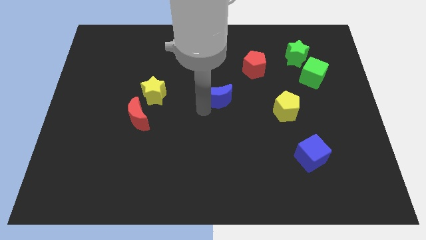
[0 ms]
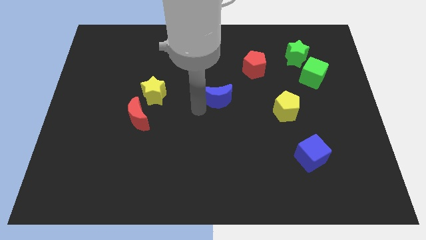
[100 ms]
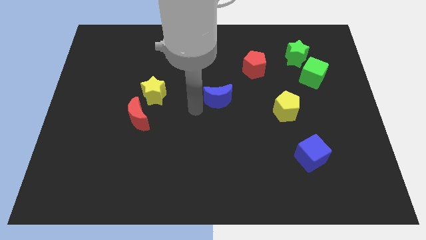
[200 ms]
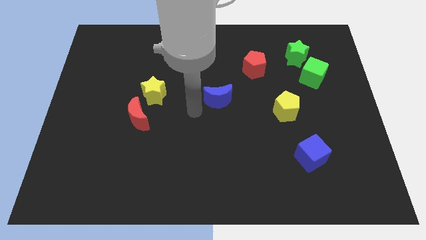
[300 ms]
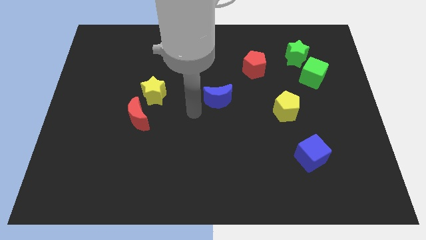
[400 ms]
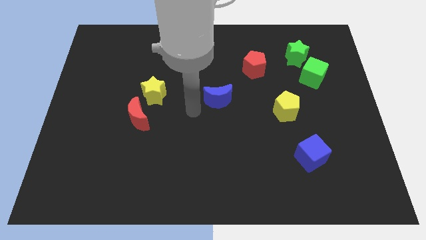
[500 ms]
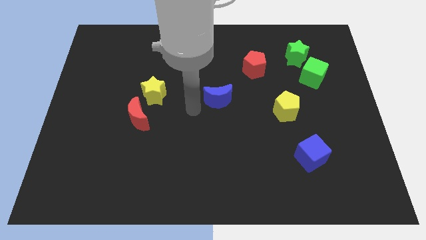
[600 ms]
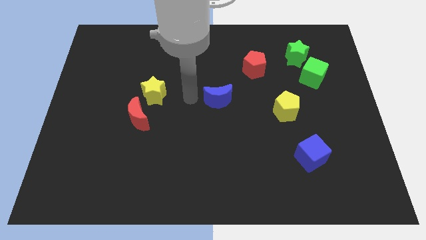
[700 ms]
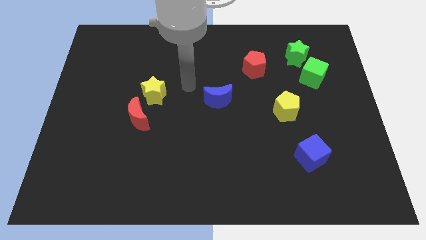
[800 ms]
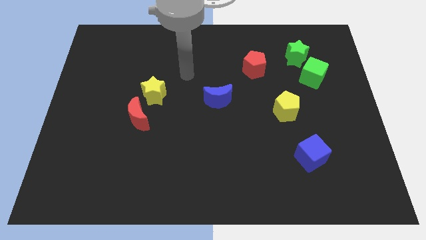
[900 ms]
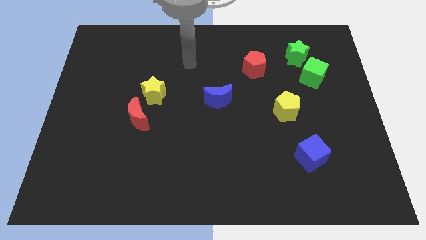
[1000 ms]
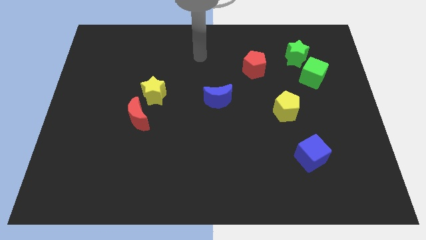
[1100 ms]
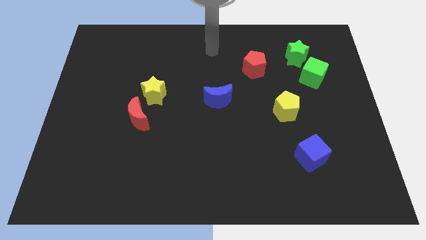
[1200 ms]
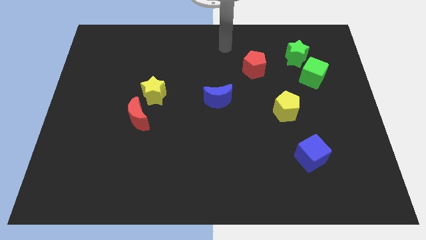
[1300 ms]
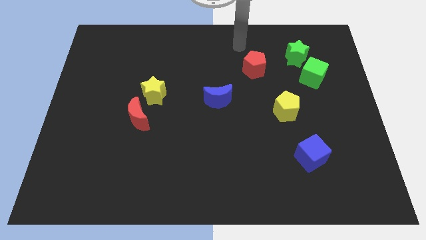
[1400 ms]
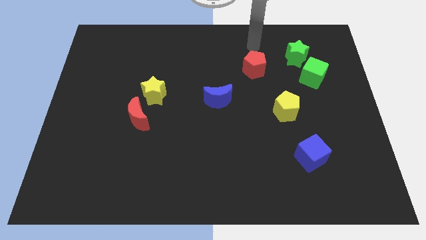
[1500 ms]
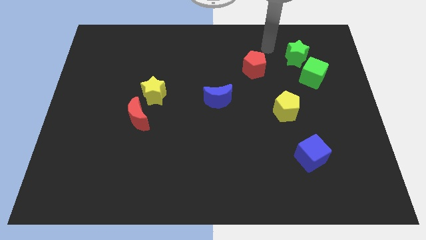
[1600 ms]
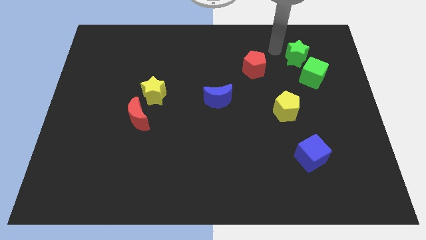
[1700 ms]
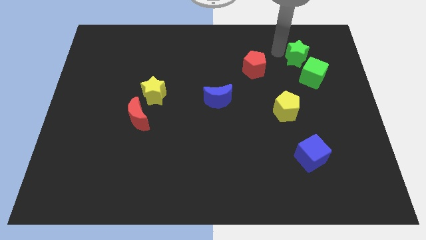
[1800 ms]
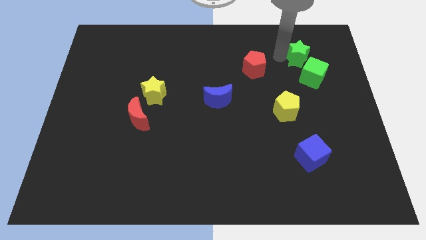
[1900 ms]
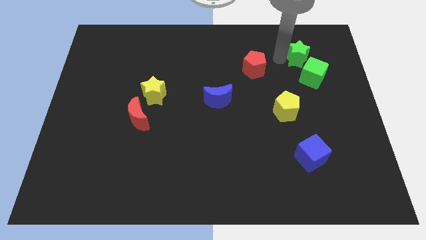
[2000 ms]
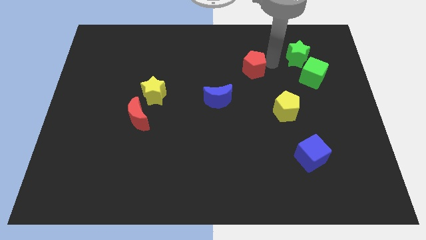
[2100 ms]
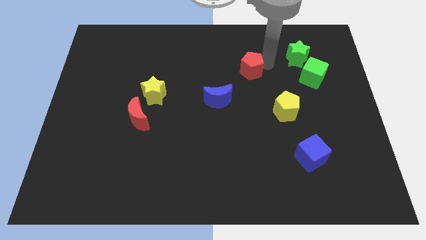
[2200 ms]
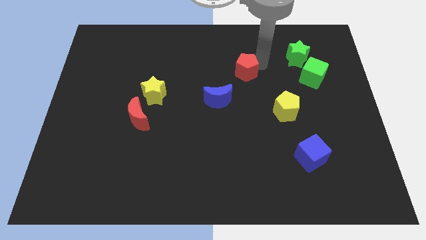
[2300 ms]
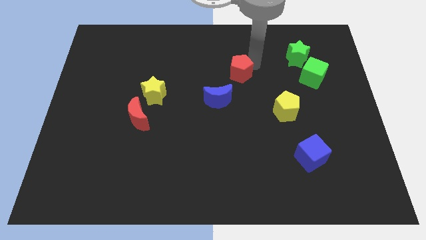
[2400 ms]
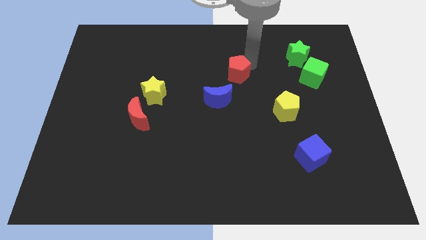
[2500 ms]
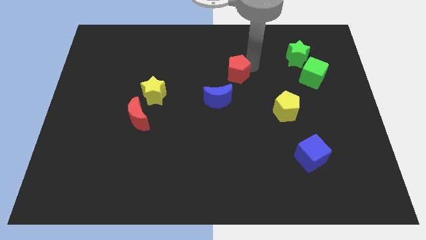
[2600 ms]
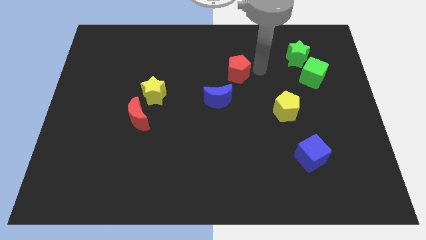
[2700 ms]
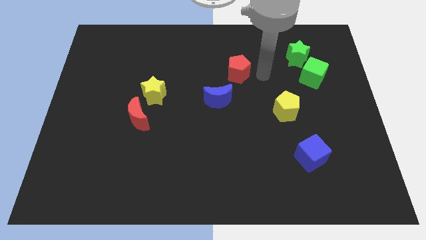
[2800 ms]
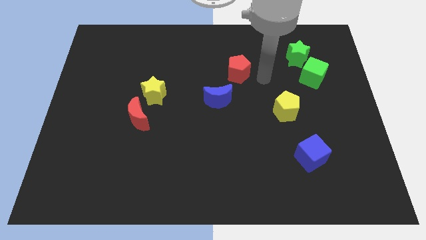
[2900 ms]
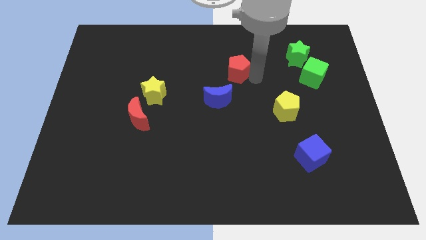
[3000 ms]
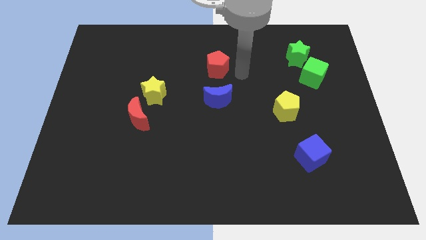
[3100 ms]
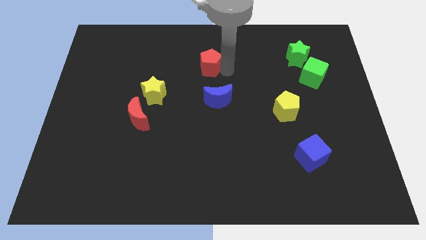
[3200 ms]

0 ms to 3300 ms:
put the red pentagon vertically at the top of the blue moon

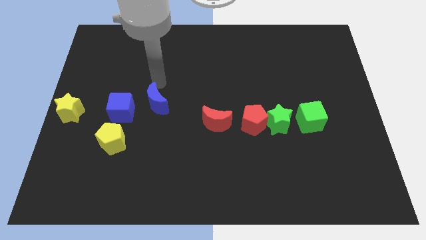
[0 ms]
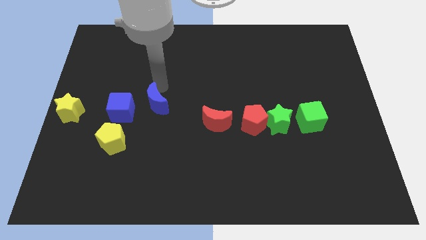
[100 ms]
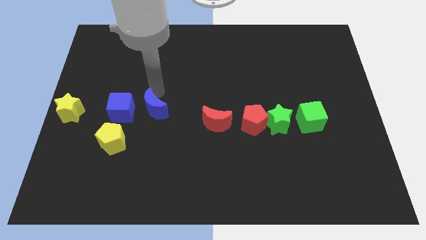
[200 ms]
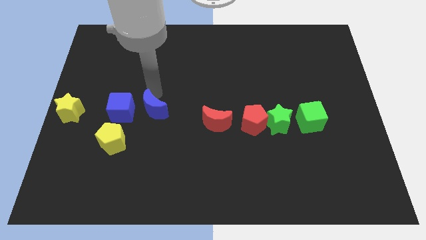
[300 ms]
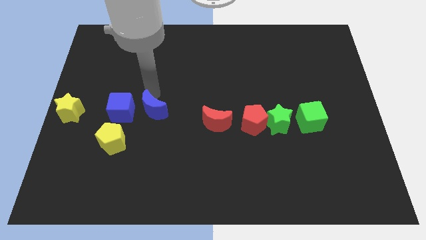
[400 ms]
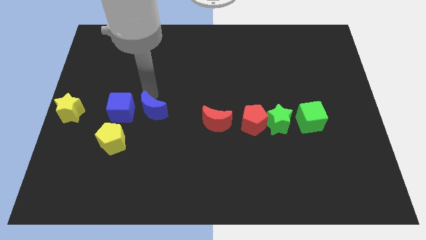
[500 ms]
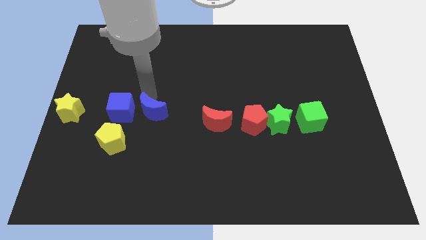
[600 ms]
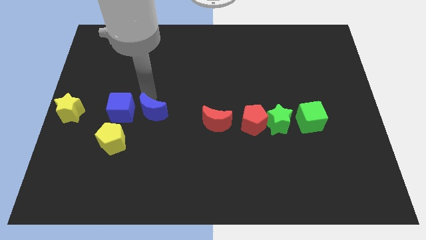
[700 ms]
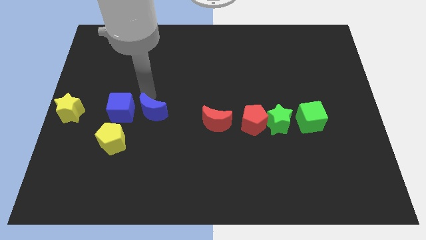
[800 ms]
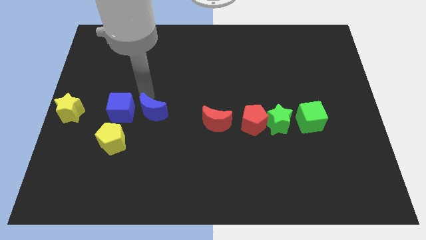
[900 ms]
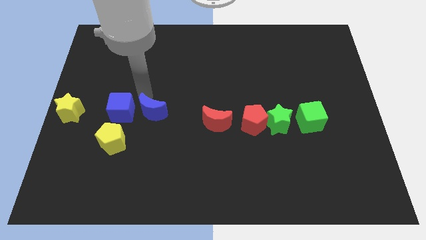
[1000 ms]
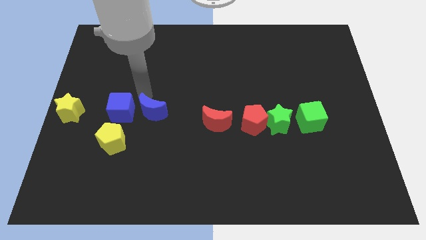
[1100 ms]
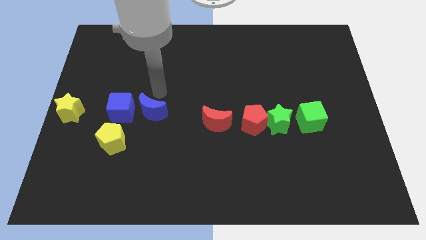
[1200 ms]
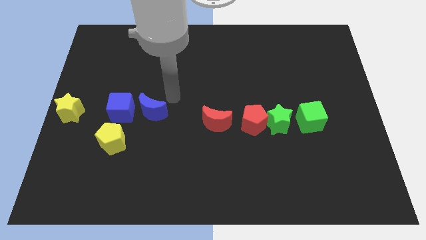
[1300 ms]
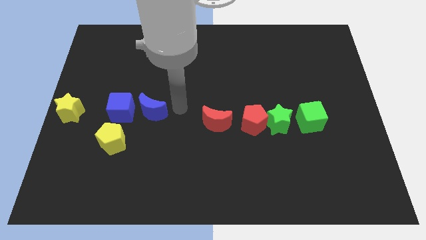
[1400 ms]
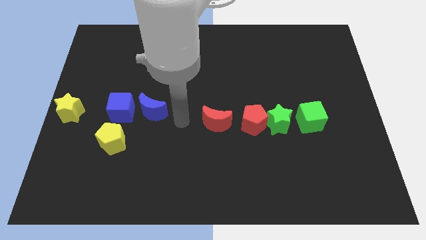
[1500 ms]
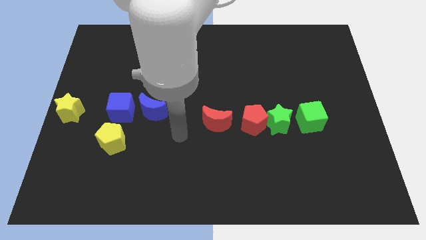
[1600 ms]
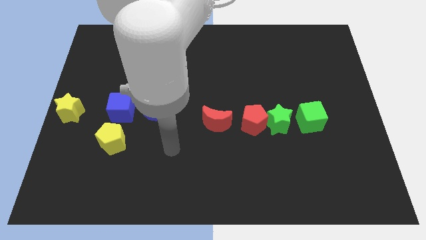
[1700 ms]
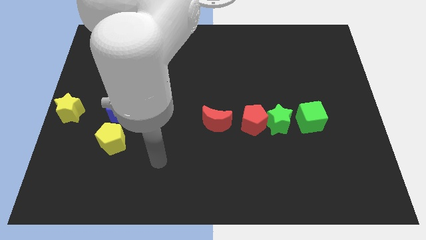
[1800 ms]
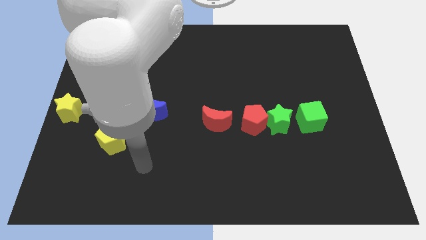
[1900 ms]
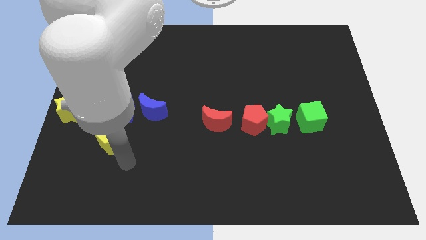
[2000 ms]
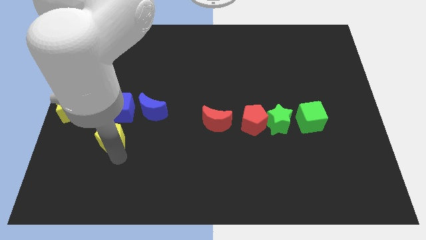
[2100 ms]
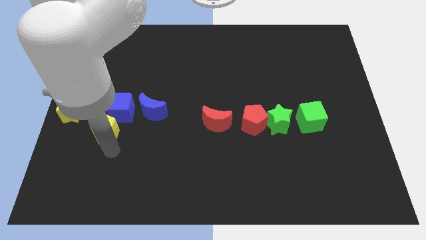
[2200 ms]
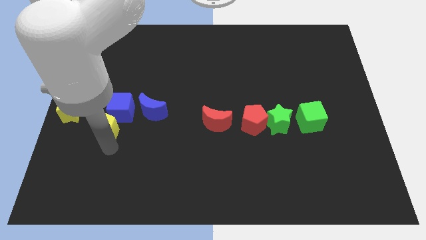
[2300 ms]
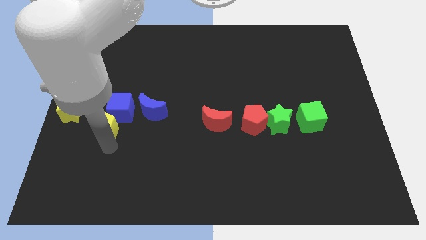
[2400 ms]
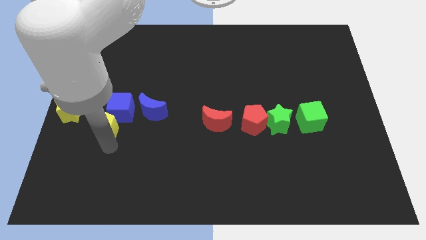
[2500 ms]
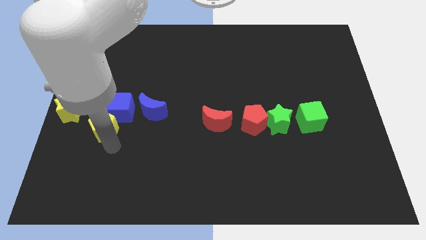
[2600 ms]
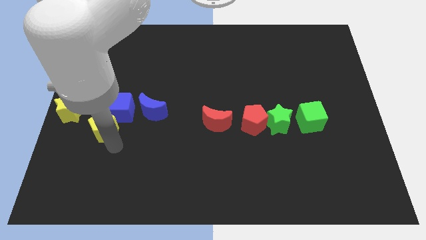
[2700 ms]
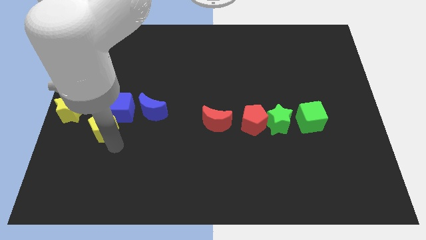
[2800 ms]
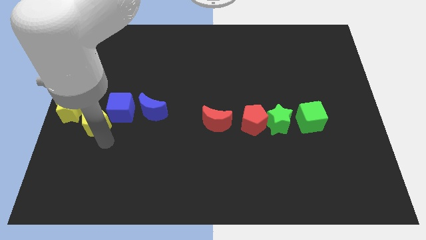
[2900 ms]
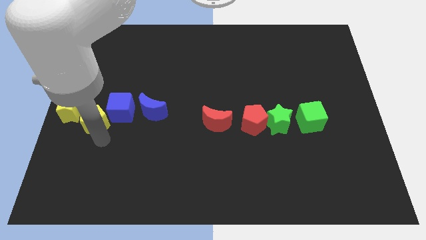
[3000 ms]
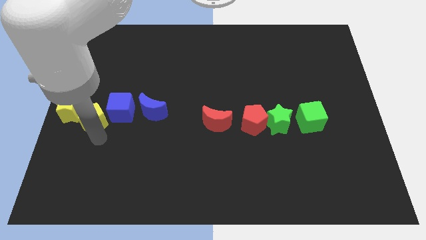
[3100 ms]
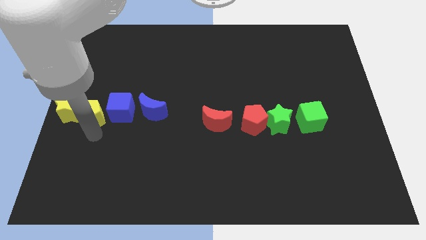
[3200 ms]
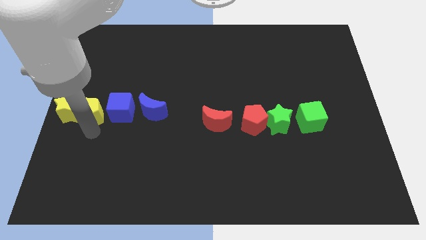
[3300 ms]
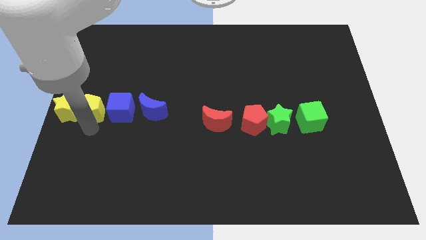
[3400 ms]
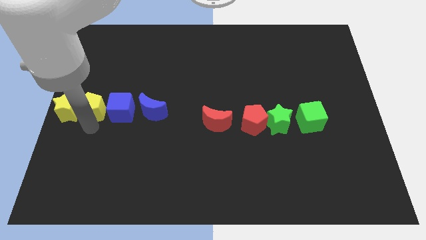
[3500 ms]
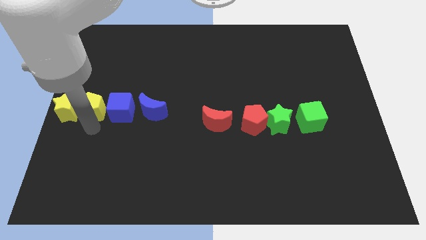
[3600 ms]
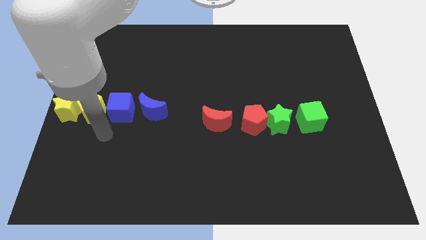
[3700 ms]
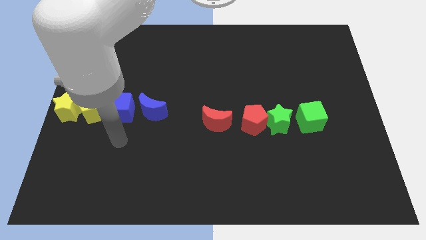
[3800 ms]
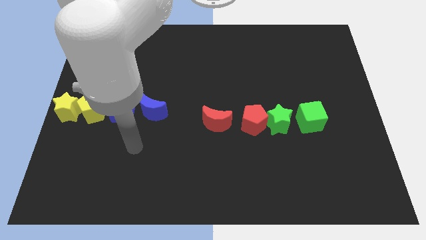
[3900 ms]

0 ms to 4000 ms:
place yellow pentagon in between blue cube and yellow star

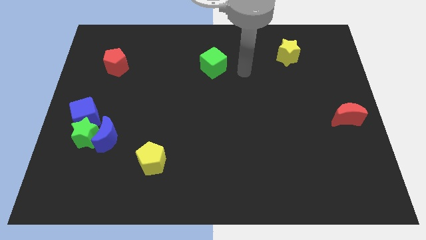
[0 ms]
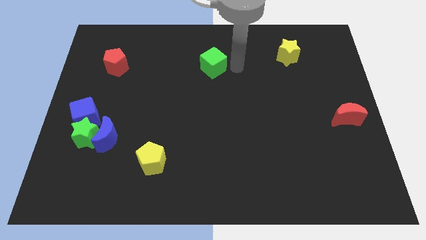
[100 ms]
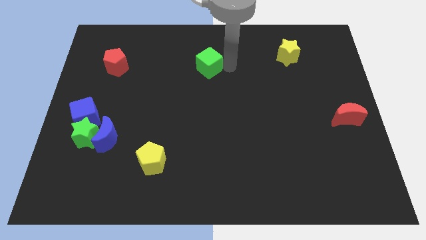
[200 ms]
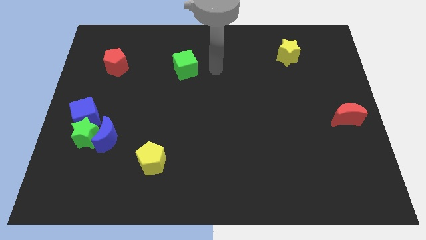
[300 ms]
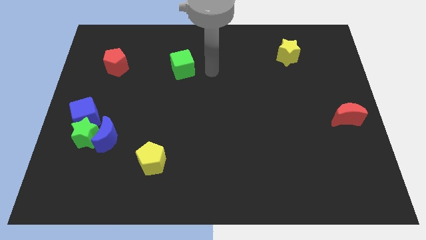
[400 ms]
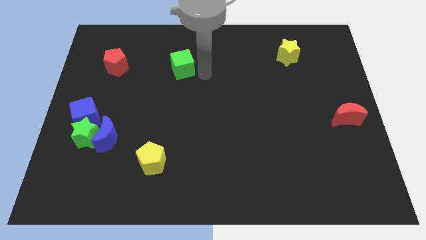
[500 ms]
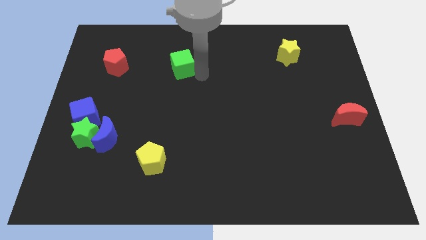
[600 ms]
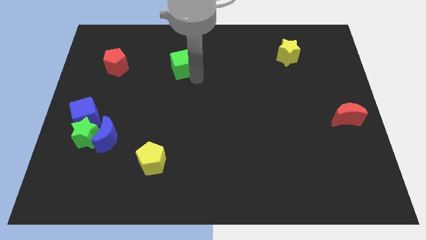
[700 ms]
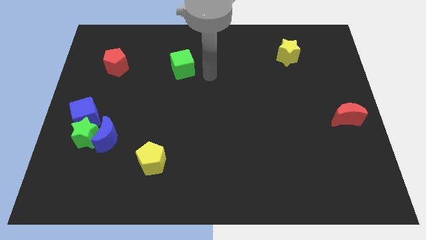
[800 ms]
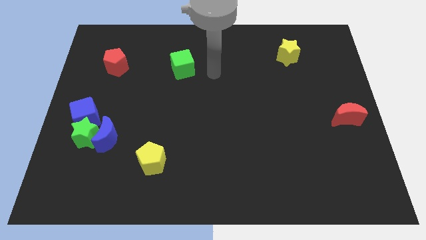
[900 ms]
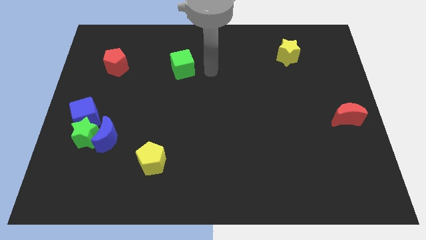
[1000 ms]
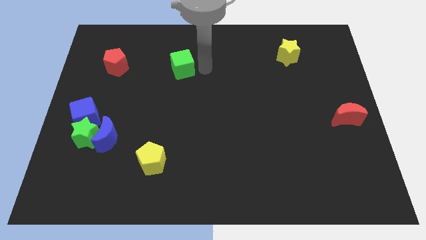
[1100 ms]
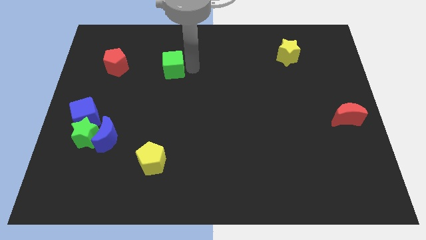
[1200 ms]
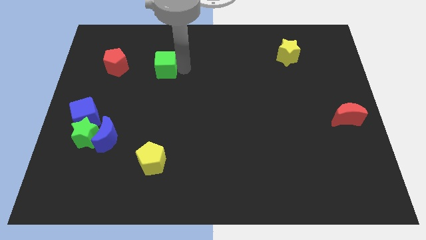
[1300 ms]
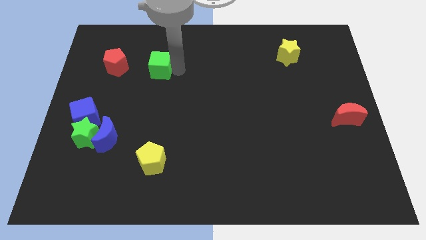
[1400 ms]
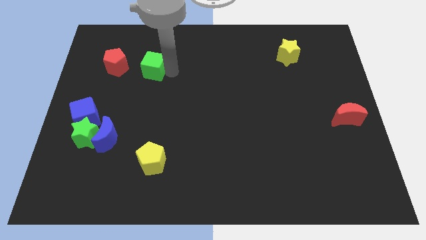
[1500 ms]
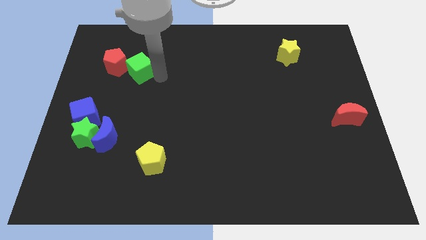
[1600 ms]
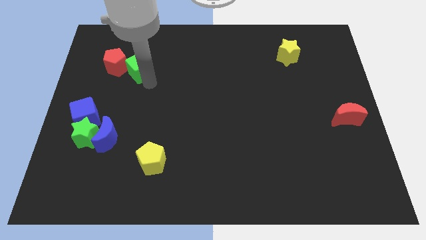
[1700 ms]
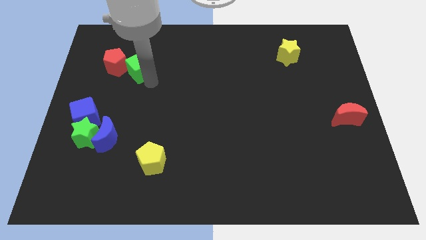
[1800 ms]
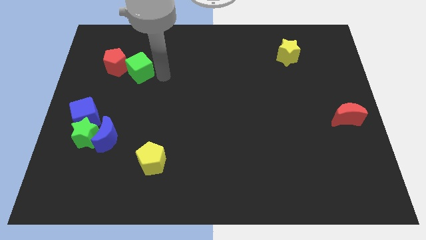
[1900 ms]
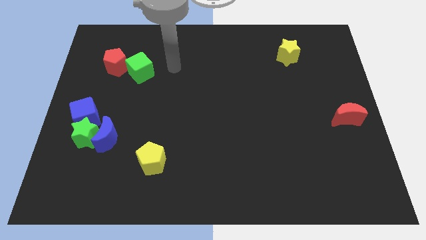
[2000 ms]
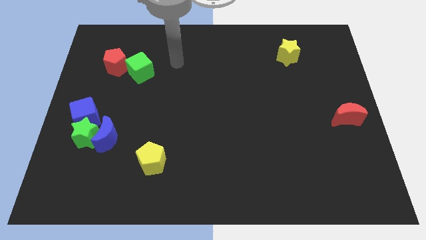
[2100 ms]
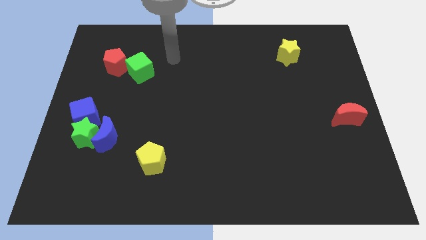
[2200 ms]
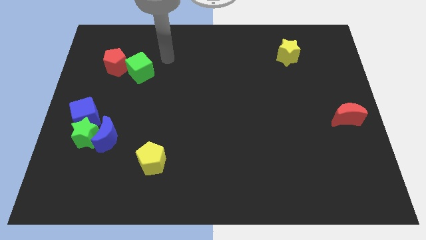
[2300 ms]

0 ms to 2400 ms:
push green cube close to the red pentagon
